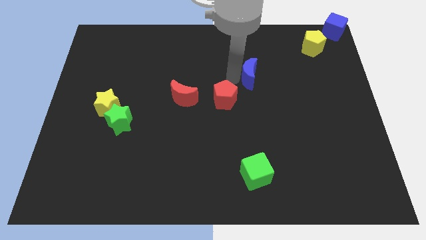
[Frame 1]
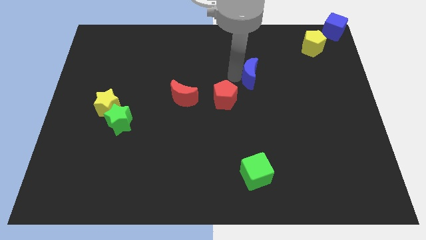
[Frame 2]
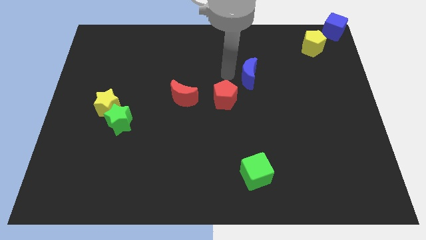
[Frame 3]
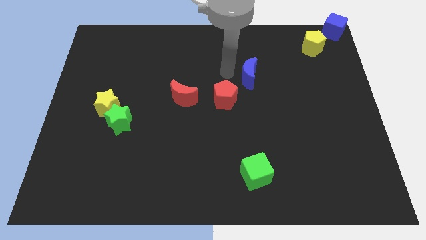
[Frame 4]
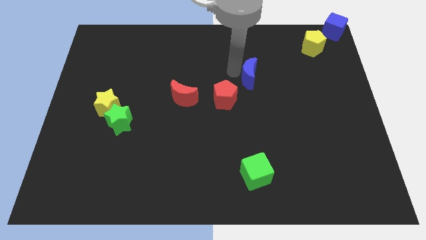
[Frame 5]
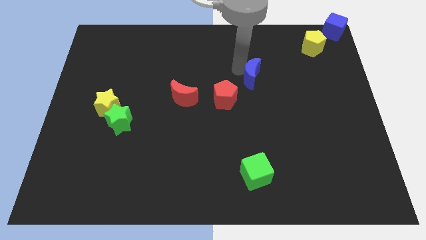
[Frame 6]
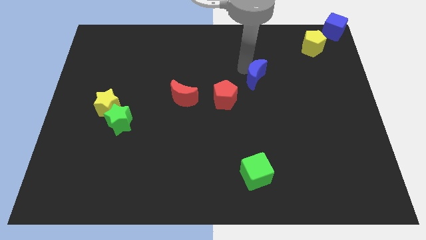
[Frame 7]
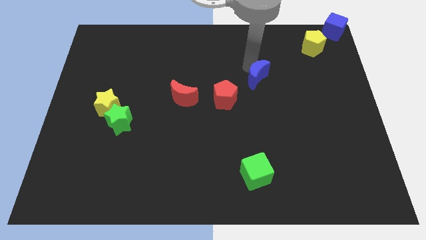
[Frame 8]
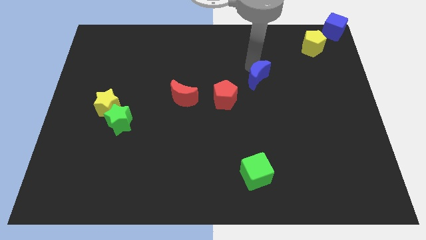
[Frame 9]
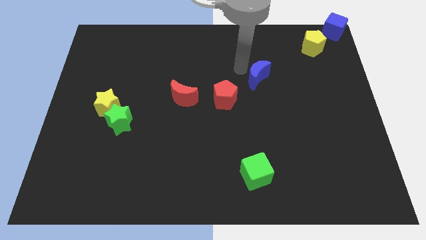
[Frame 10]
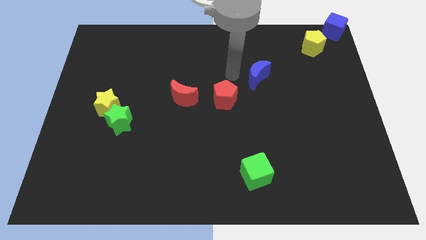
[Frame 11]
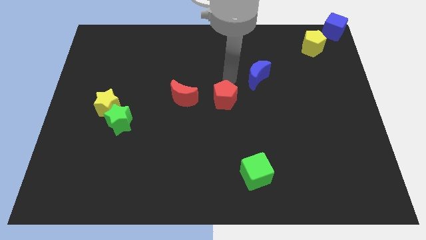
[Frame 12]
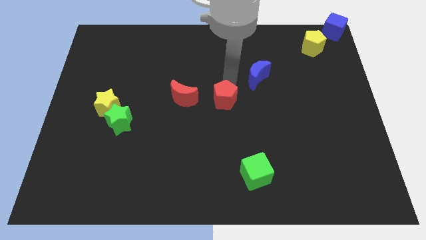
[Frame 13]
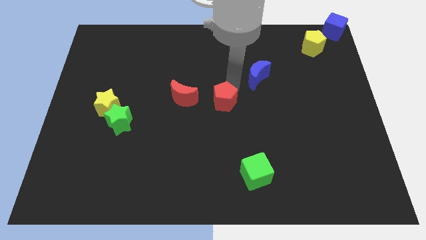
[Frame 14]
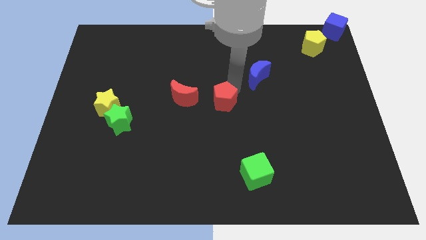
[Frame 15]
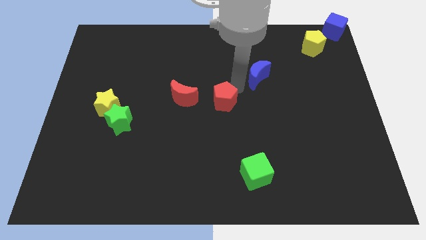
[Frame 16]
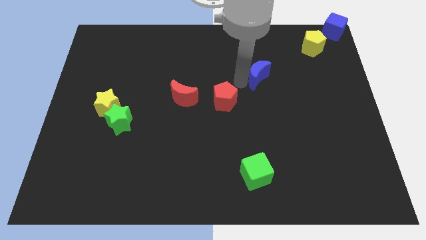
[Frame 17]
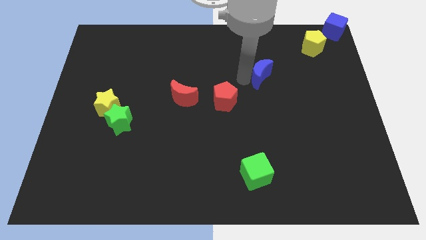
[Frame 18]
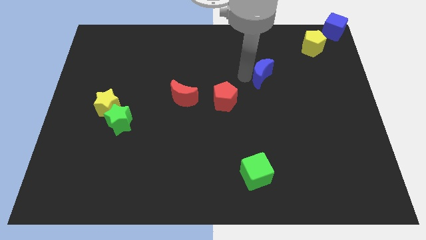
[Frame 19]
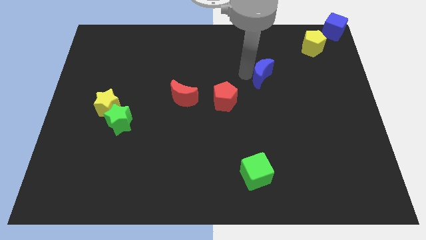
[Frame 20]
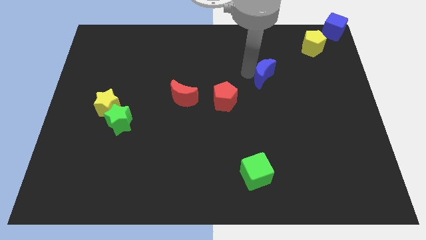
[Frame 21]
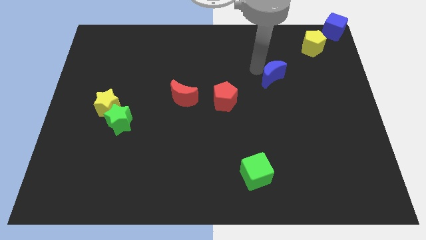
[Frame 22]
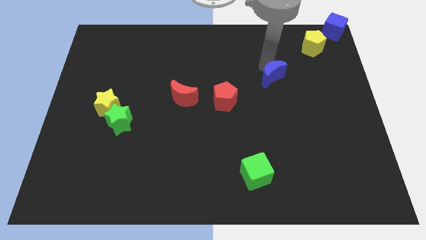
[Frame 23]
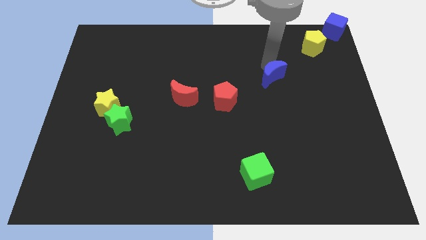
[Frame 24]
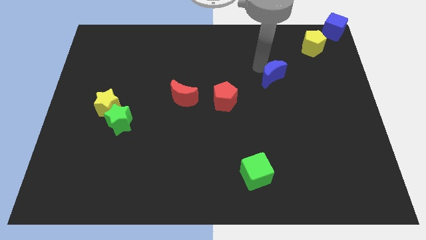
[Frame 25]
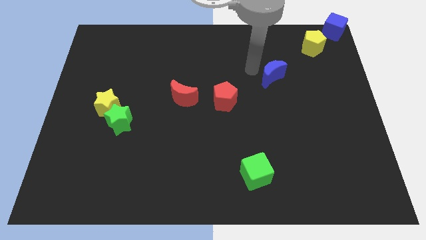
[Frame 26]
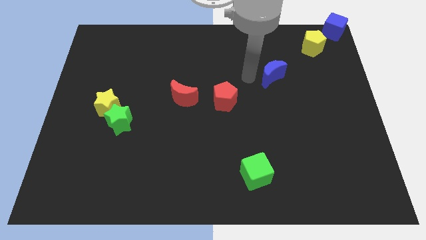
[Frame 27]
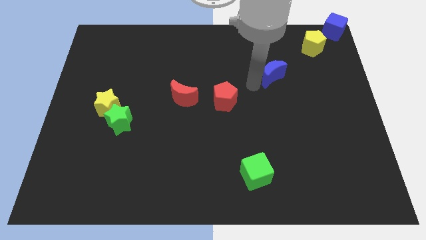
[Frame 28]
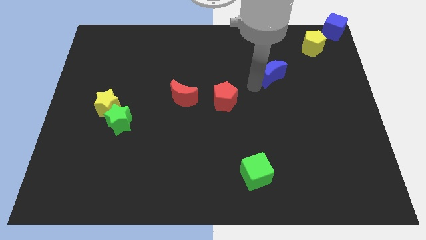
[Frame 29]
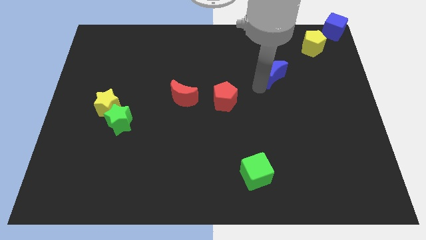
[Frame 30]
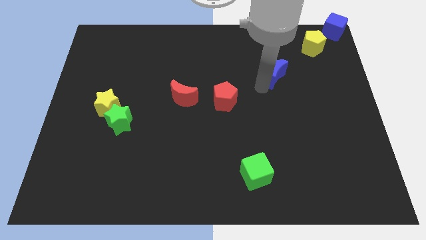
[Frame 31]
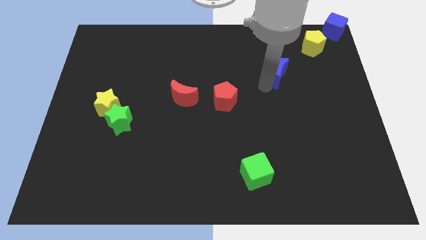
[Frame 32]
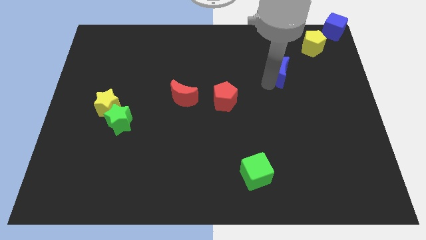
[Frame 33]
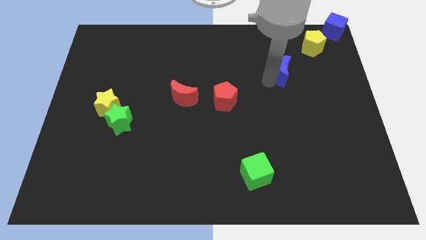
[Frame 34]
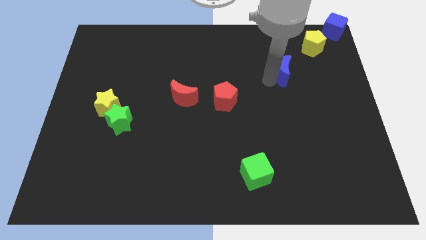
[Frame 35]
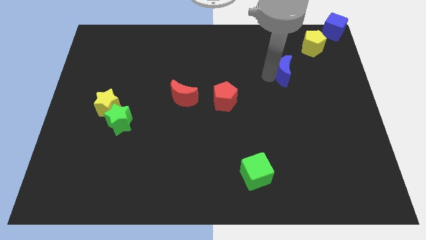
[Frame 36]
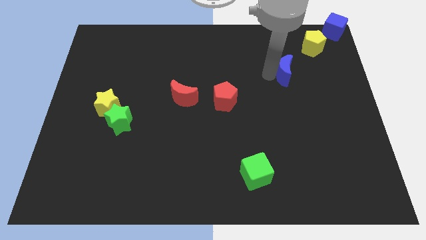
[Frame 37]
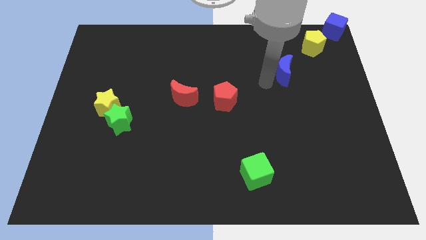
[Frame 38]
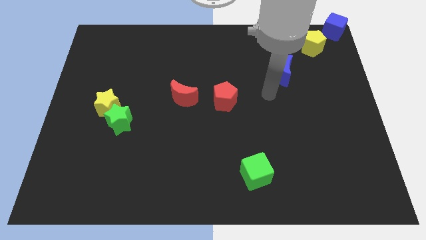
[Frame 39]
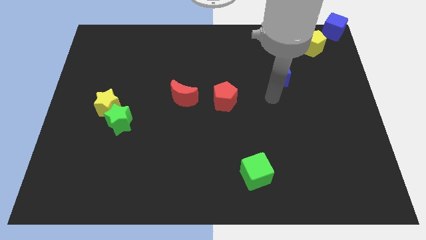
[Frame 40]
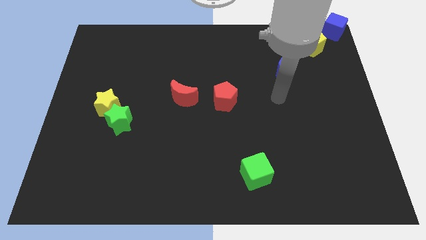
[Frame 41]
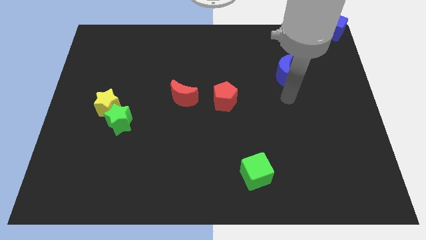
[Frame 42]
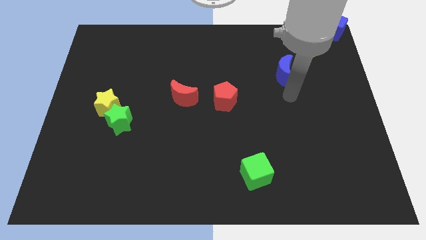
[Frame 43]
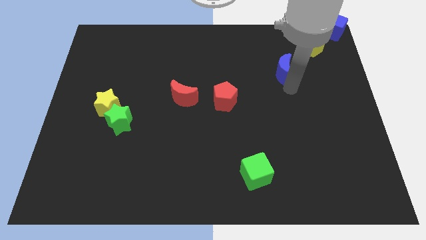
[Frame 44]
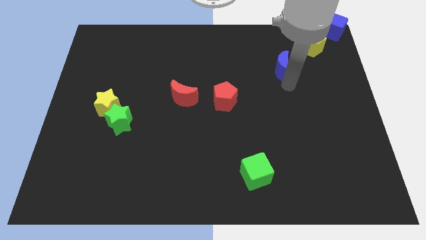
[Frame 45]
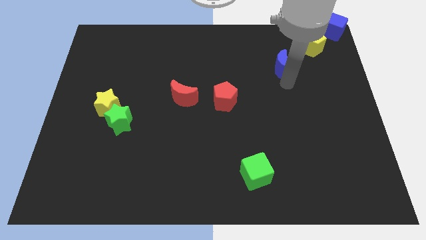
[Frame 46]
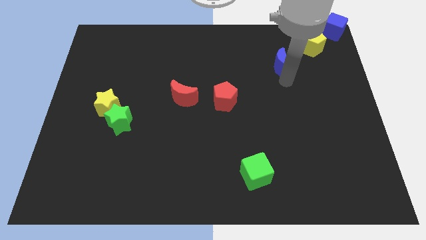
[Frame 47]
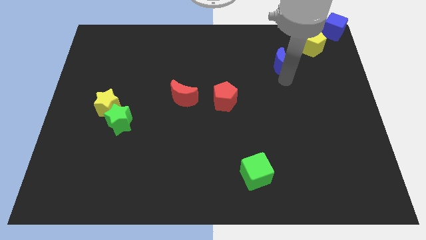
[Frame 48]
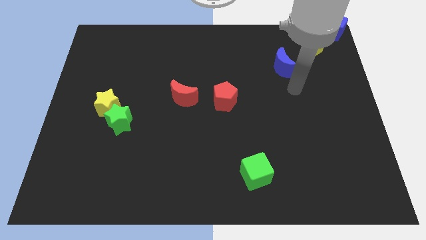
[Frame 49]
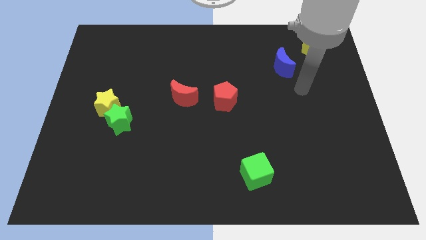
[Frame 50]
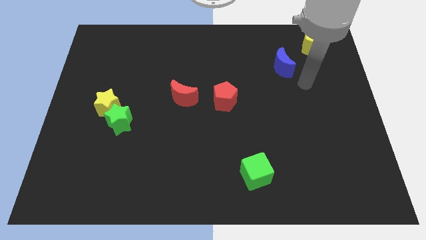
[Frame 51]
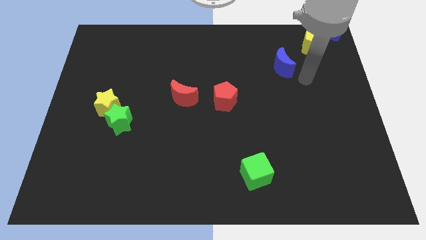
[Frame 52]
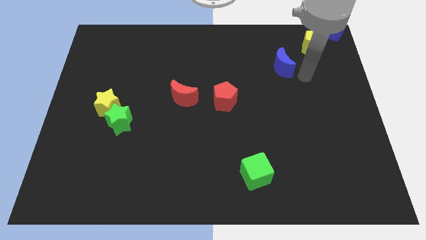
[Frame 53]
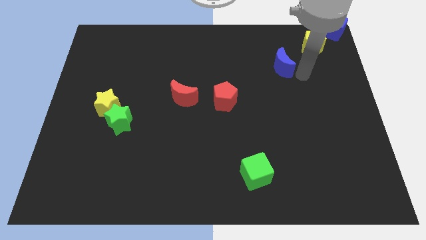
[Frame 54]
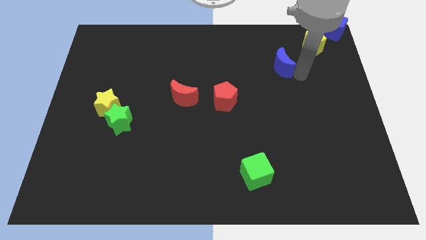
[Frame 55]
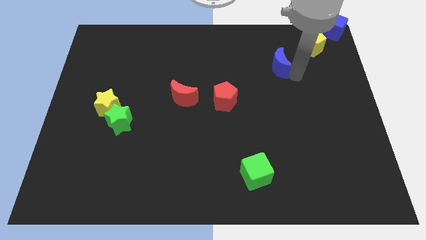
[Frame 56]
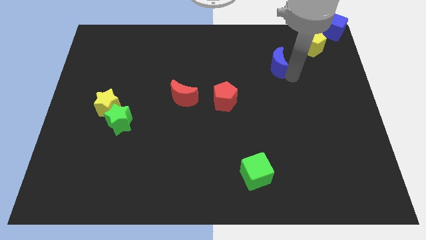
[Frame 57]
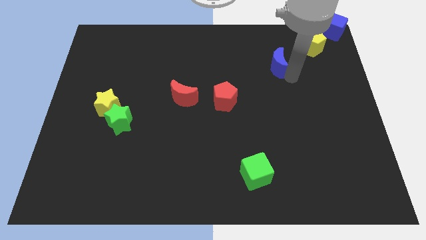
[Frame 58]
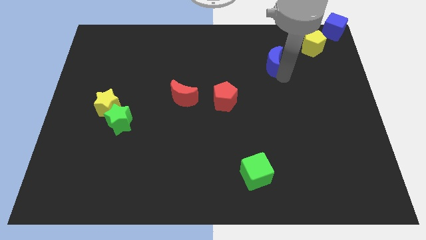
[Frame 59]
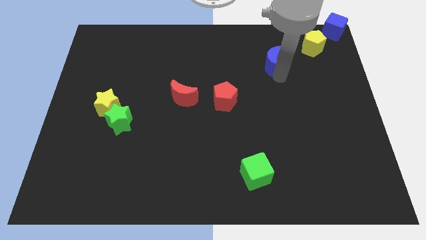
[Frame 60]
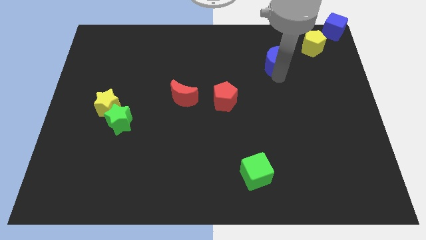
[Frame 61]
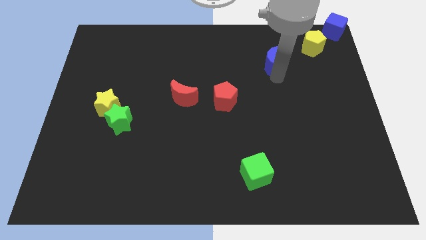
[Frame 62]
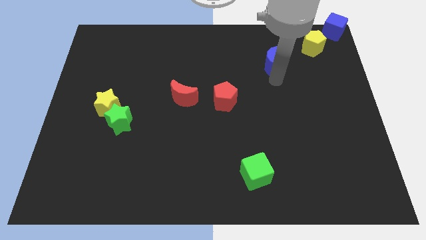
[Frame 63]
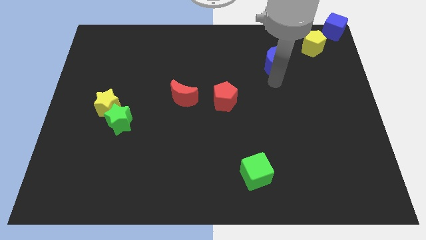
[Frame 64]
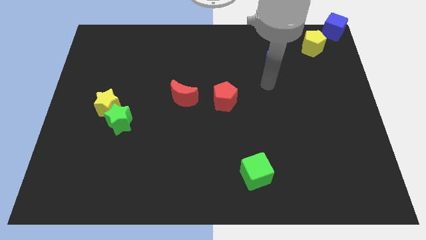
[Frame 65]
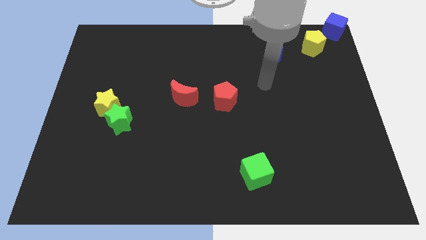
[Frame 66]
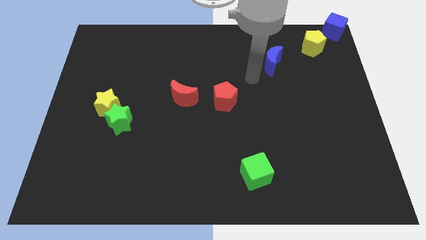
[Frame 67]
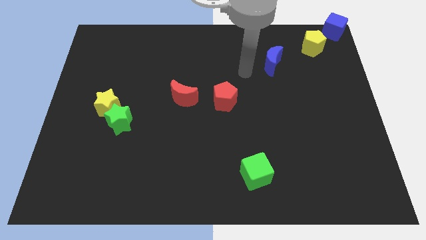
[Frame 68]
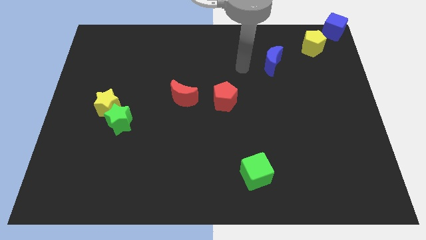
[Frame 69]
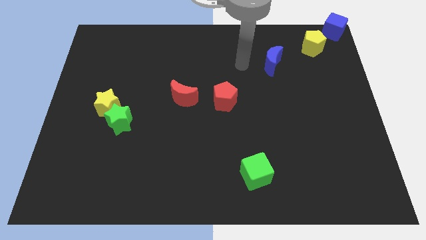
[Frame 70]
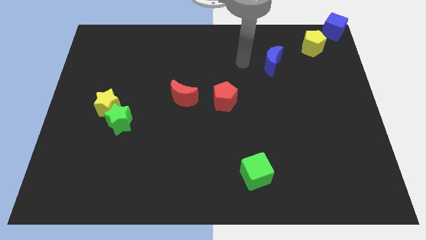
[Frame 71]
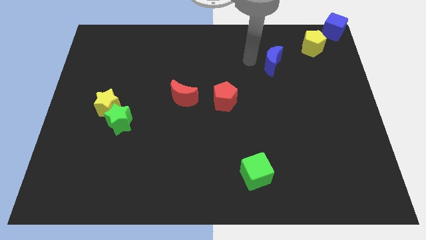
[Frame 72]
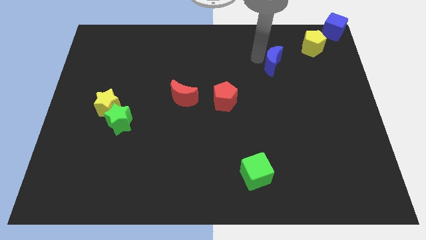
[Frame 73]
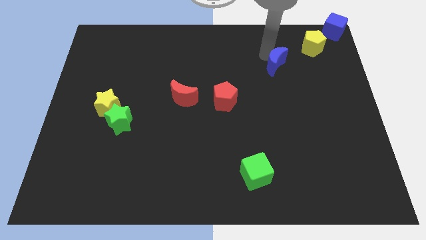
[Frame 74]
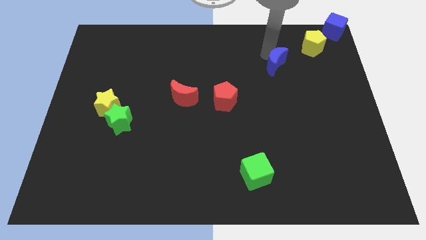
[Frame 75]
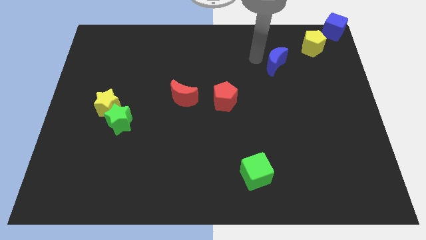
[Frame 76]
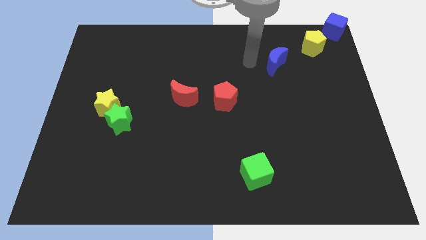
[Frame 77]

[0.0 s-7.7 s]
place the blue crescent diagonally bottom left to the yellow pentagon

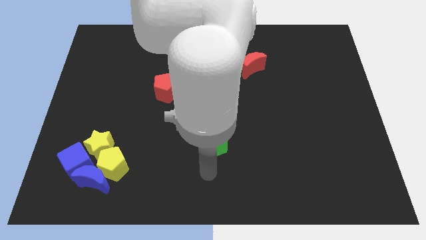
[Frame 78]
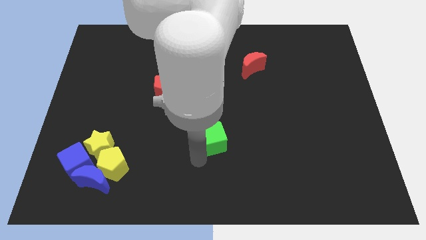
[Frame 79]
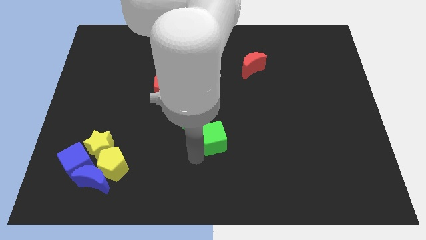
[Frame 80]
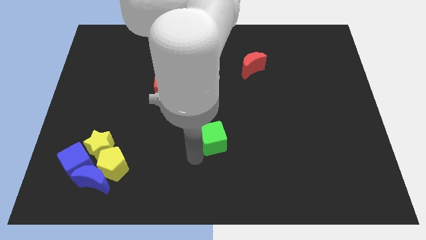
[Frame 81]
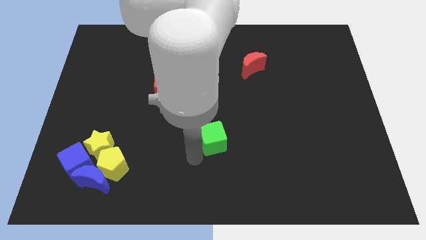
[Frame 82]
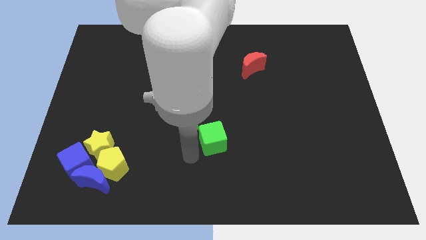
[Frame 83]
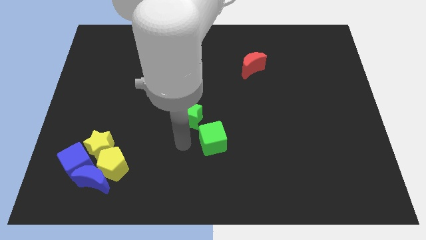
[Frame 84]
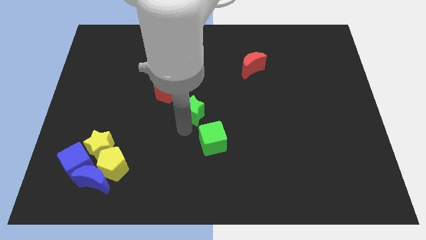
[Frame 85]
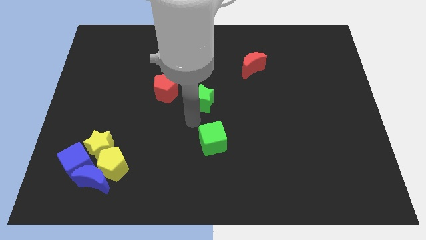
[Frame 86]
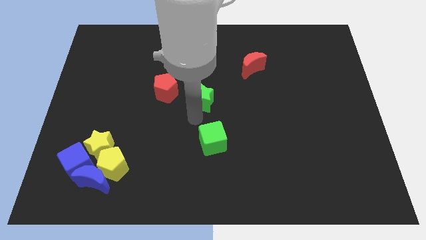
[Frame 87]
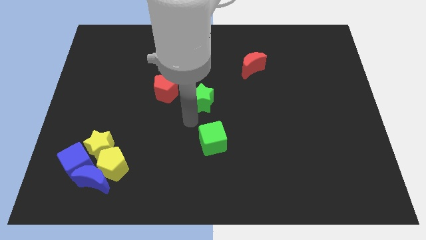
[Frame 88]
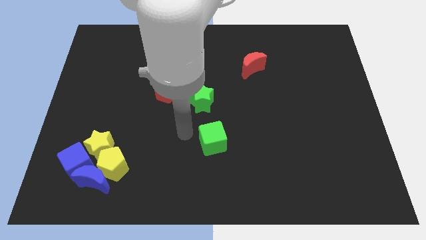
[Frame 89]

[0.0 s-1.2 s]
move the green star upwards

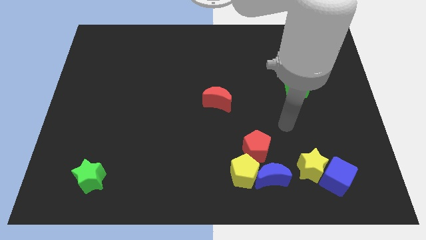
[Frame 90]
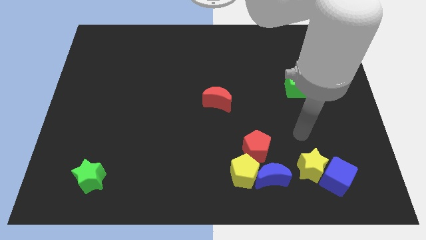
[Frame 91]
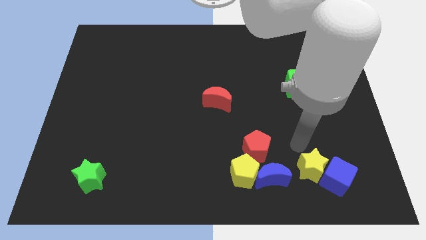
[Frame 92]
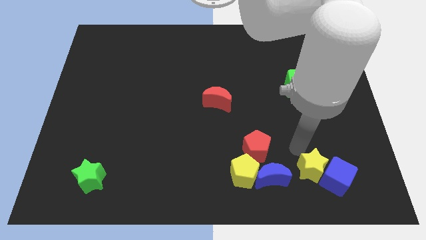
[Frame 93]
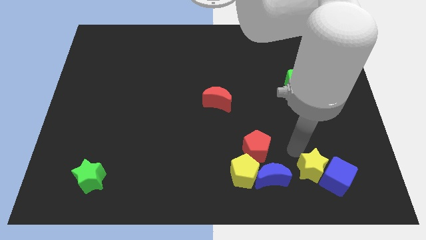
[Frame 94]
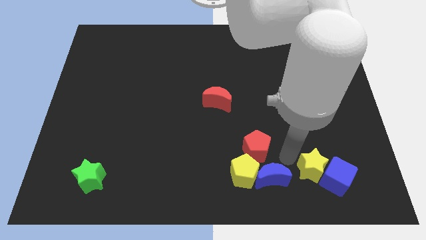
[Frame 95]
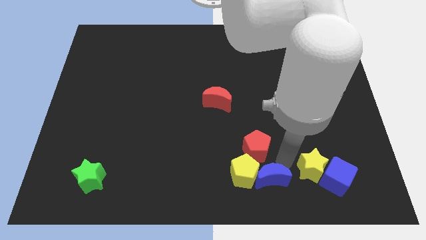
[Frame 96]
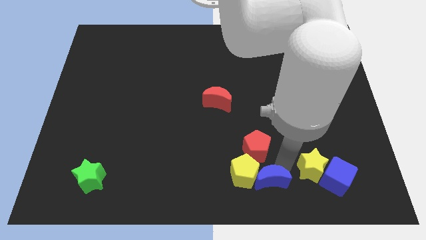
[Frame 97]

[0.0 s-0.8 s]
go and touch the top of the blue crescent
